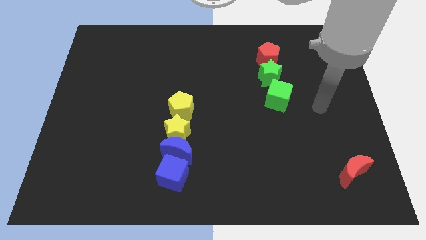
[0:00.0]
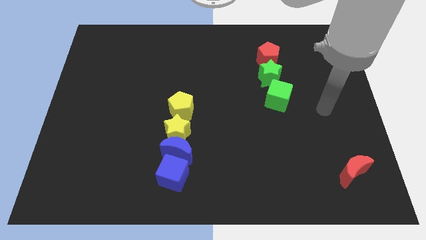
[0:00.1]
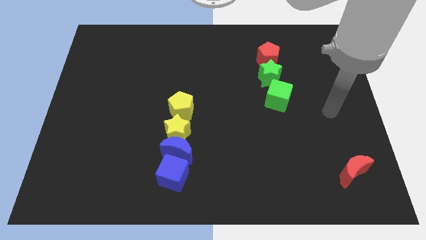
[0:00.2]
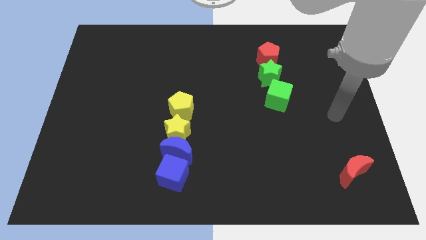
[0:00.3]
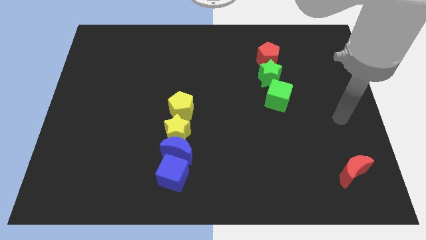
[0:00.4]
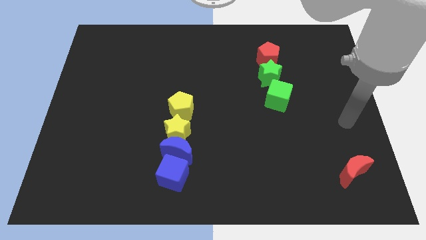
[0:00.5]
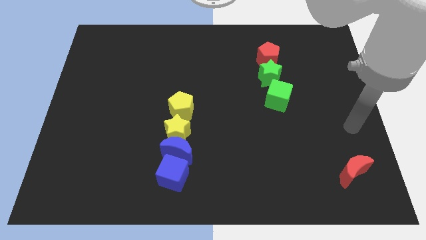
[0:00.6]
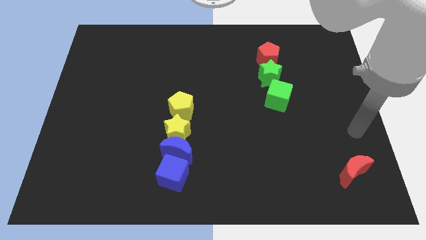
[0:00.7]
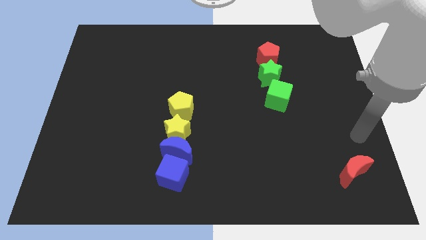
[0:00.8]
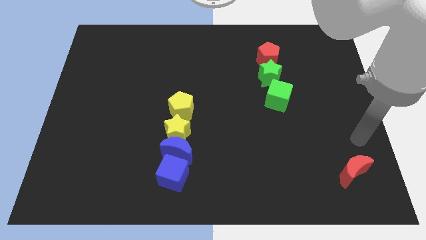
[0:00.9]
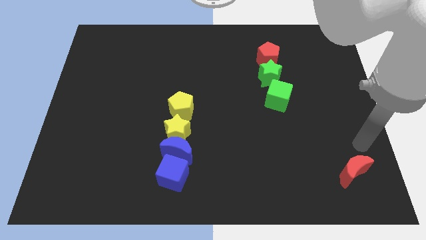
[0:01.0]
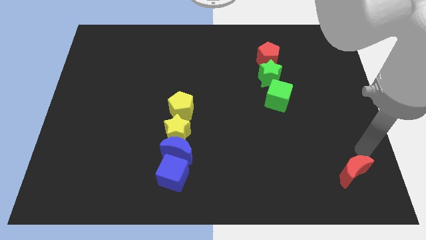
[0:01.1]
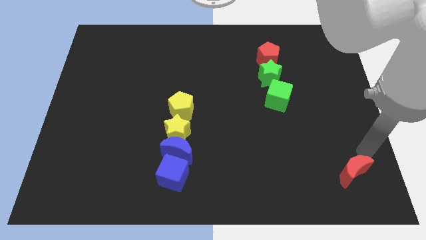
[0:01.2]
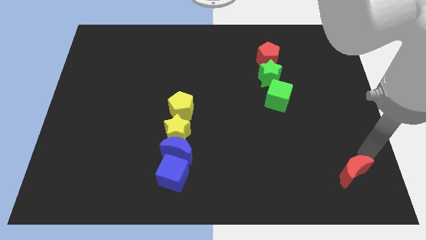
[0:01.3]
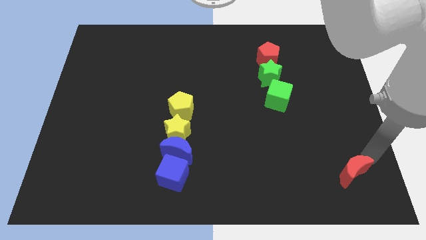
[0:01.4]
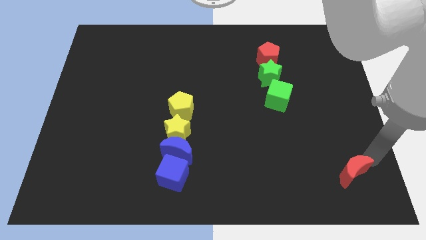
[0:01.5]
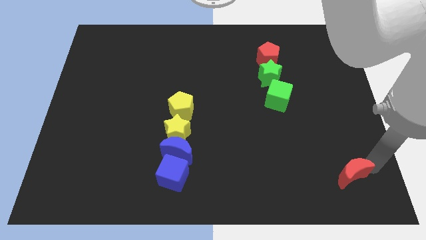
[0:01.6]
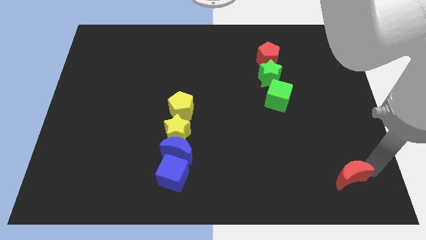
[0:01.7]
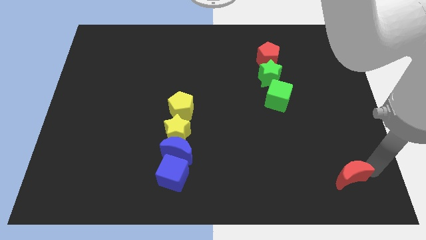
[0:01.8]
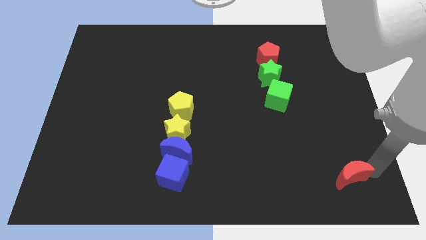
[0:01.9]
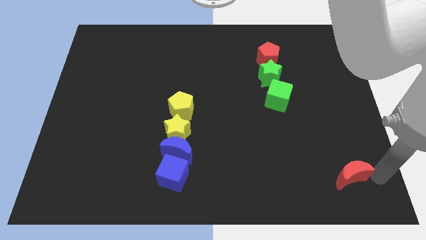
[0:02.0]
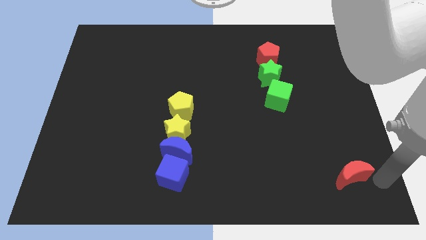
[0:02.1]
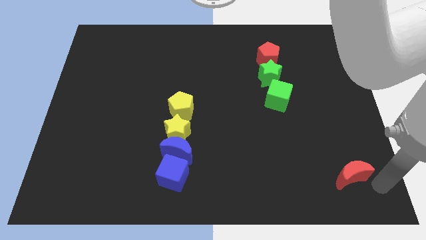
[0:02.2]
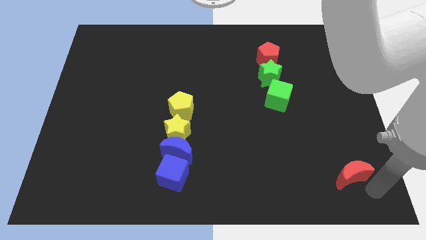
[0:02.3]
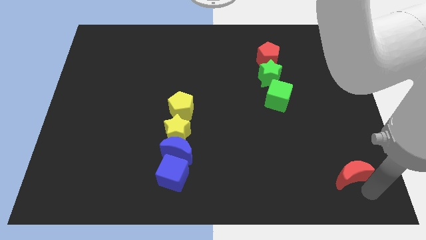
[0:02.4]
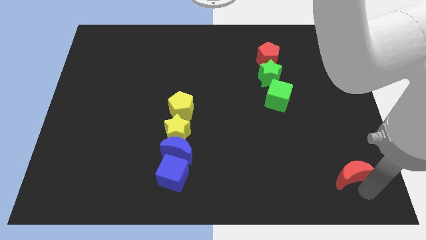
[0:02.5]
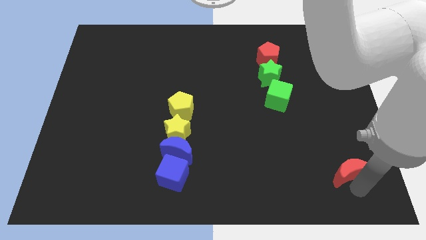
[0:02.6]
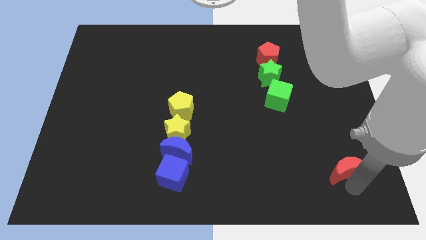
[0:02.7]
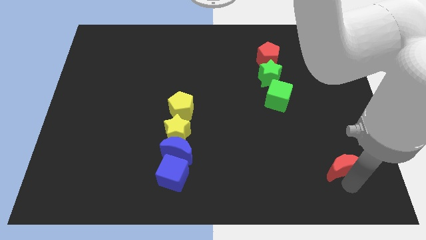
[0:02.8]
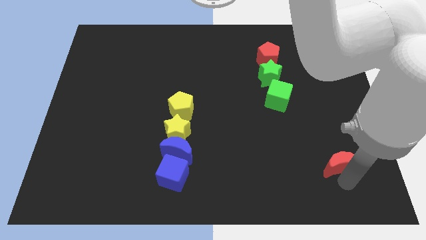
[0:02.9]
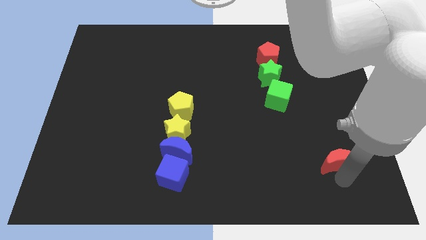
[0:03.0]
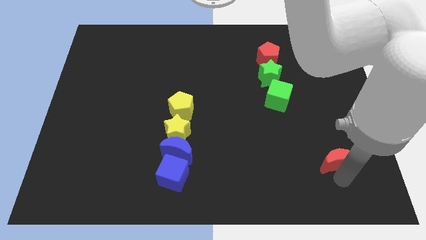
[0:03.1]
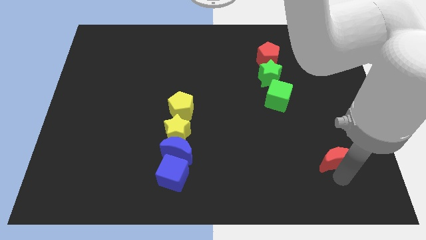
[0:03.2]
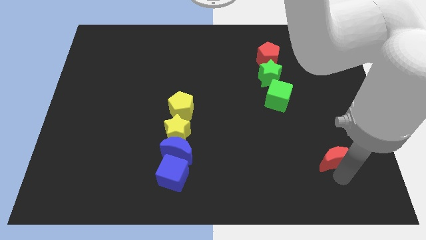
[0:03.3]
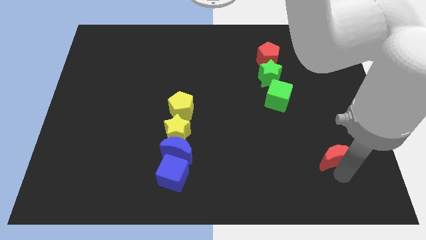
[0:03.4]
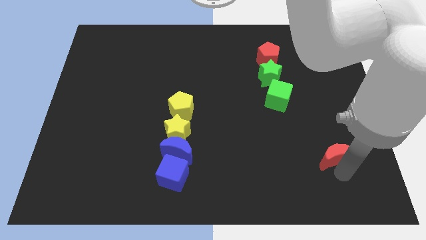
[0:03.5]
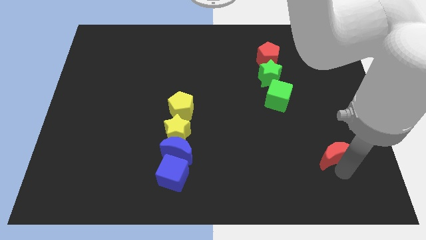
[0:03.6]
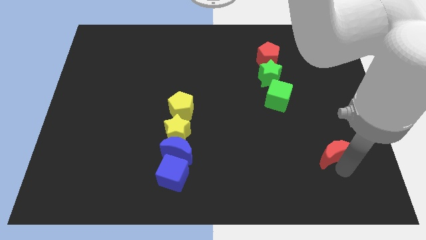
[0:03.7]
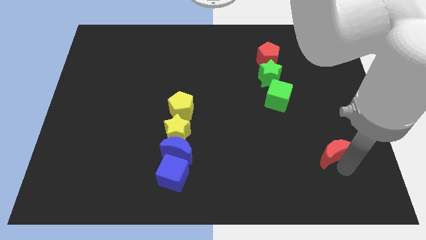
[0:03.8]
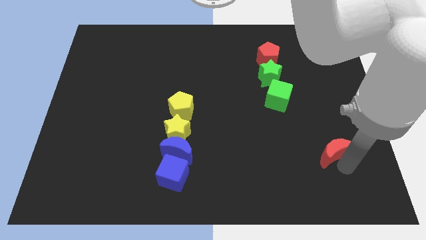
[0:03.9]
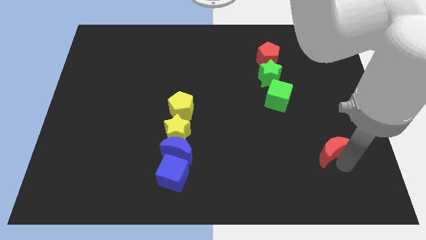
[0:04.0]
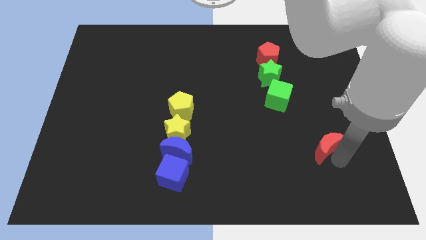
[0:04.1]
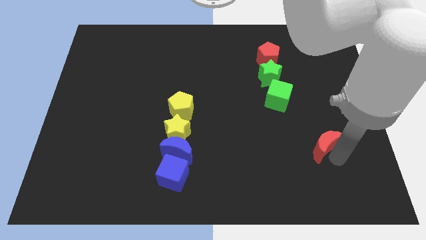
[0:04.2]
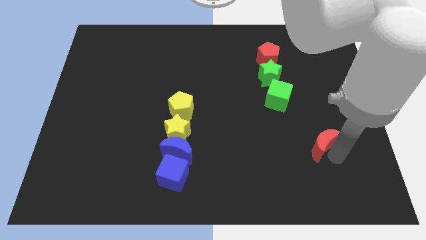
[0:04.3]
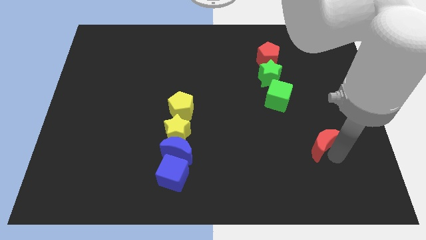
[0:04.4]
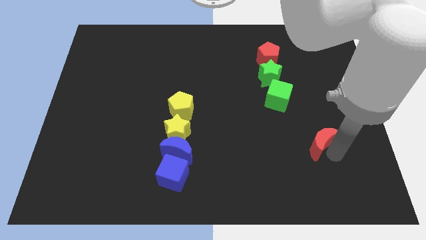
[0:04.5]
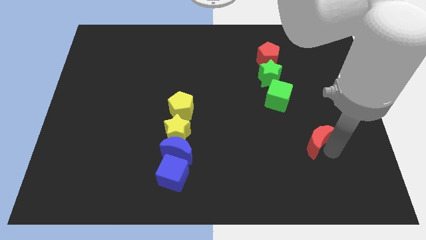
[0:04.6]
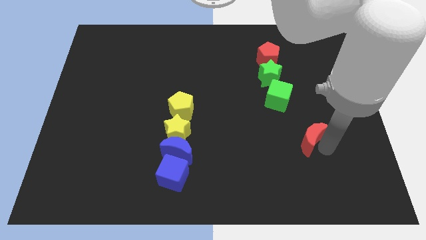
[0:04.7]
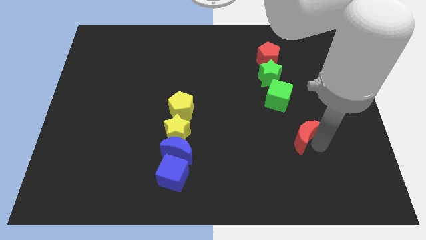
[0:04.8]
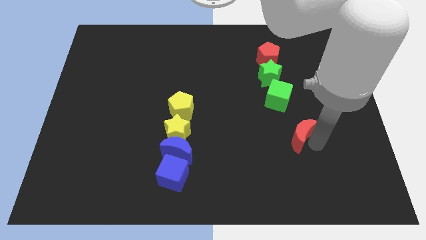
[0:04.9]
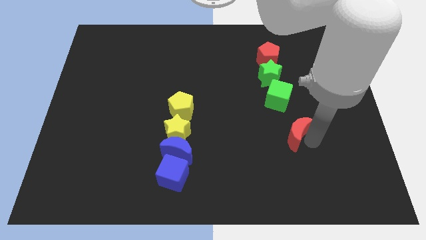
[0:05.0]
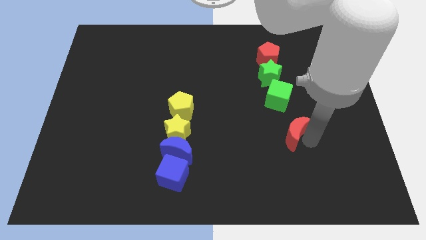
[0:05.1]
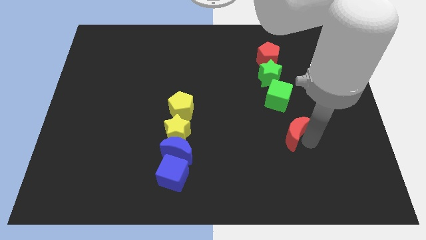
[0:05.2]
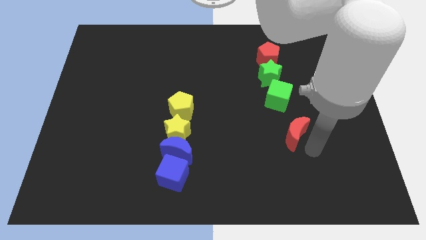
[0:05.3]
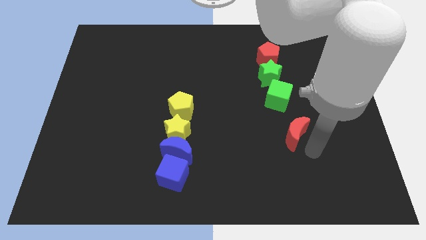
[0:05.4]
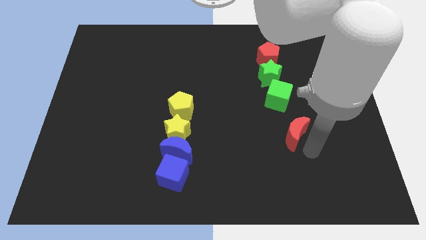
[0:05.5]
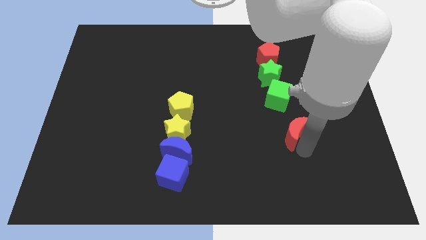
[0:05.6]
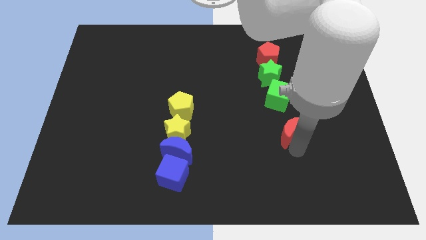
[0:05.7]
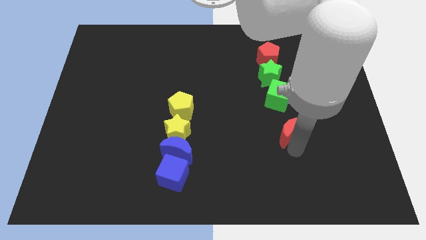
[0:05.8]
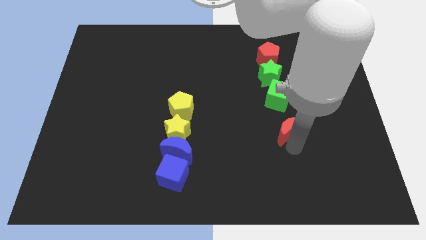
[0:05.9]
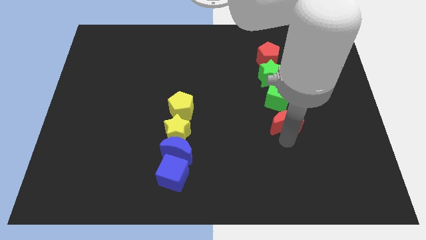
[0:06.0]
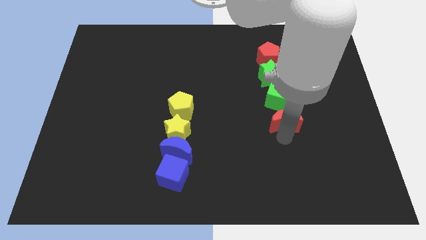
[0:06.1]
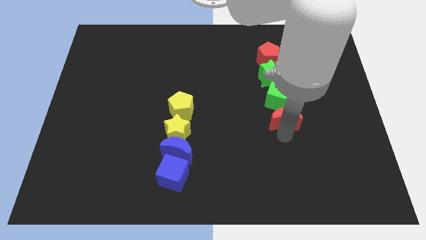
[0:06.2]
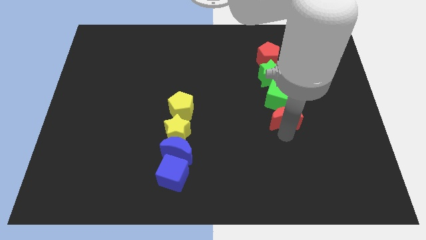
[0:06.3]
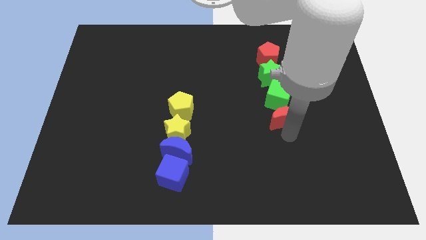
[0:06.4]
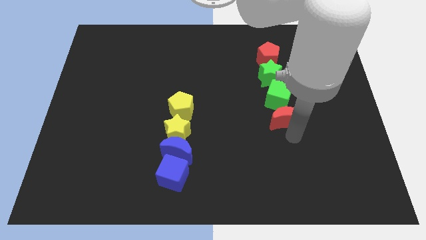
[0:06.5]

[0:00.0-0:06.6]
move the red crescent to the bottom of the green cube

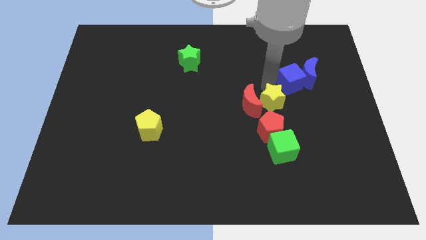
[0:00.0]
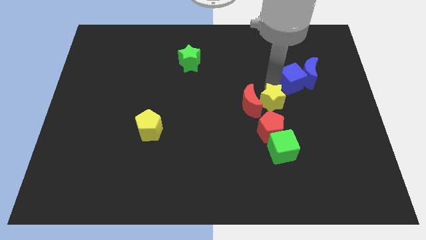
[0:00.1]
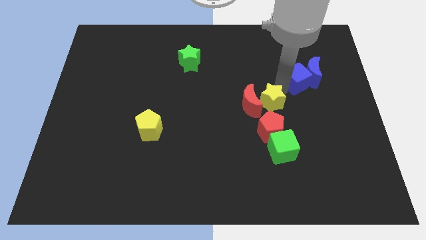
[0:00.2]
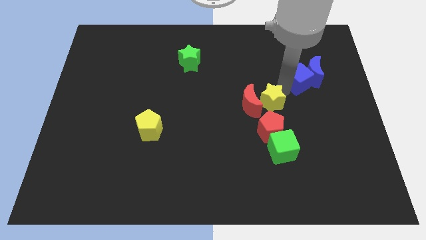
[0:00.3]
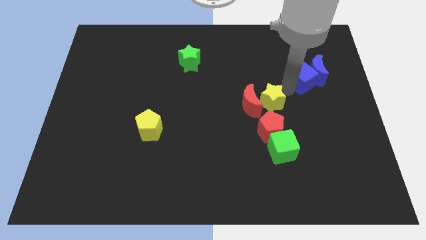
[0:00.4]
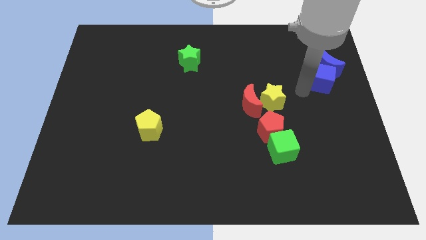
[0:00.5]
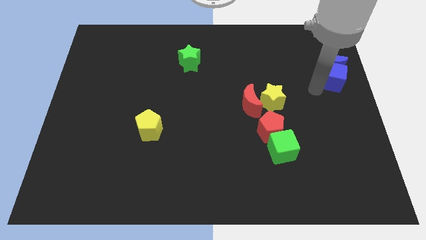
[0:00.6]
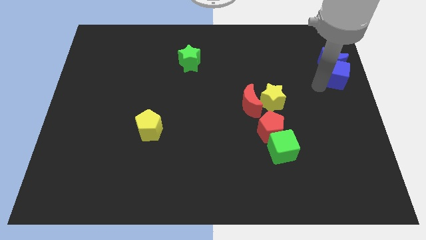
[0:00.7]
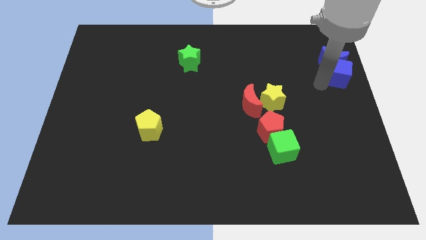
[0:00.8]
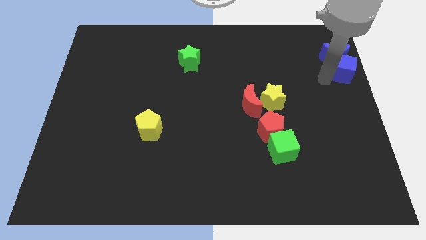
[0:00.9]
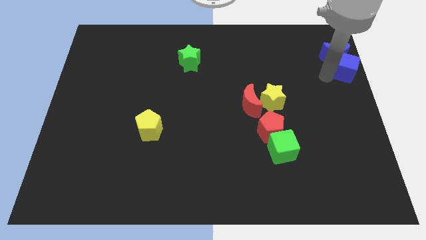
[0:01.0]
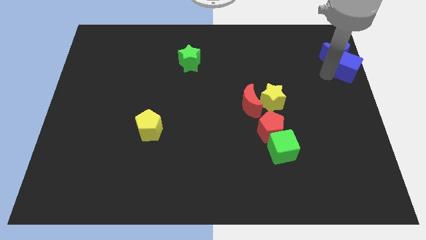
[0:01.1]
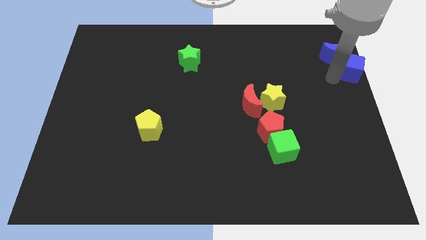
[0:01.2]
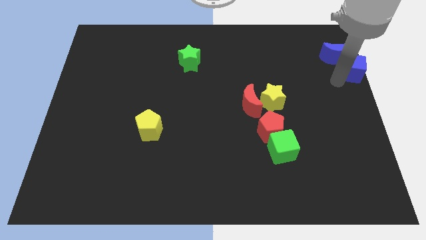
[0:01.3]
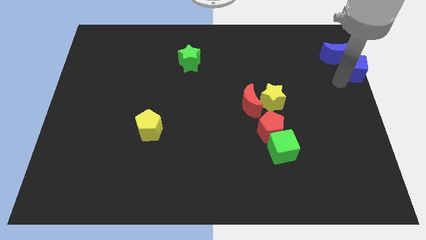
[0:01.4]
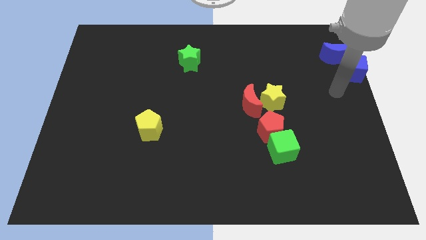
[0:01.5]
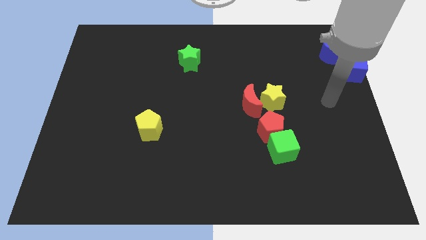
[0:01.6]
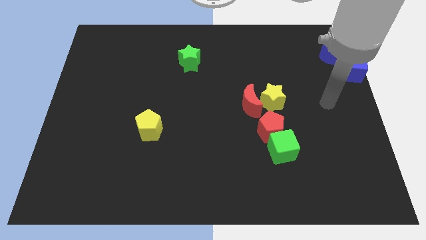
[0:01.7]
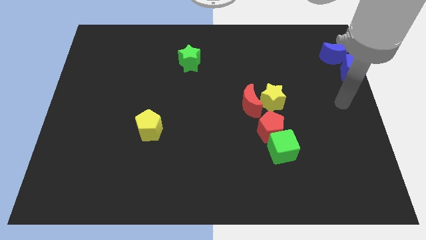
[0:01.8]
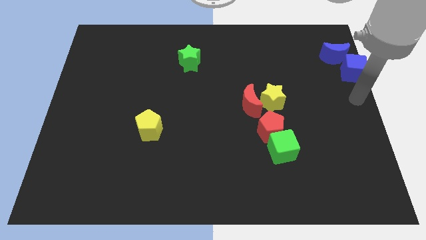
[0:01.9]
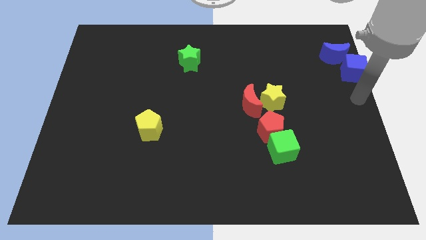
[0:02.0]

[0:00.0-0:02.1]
move blue cube and blue moon bottom right of the board

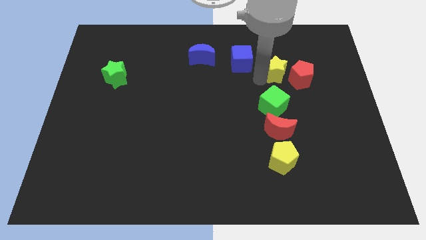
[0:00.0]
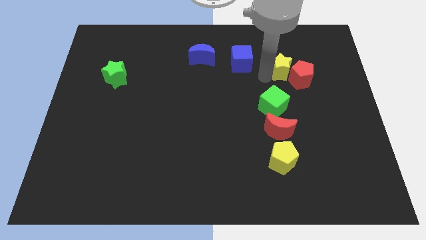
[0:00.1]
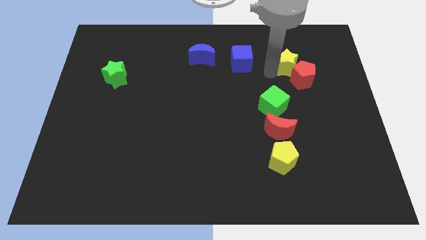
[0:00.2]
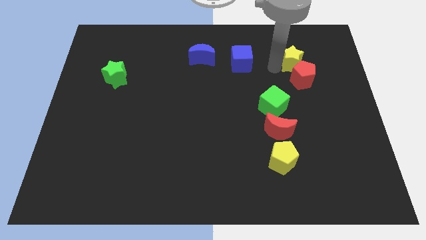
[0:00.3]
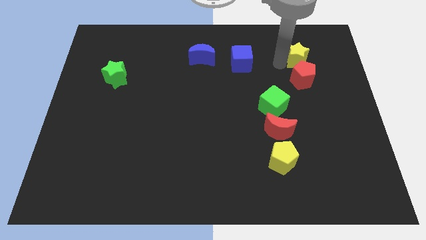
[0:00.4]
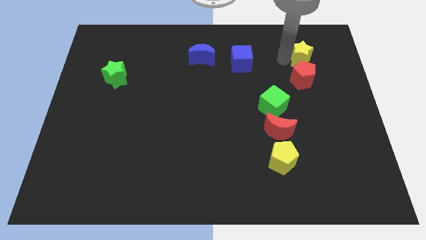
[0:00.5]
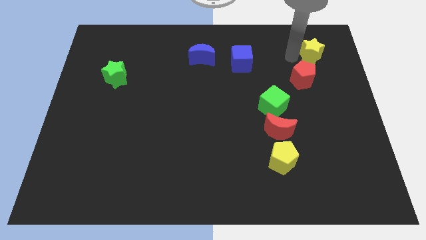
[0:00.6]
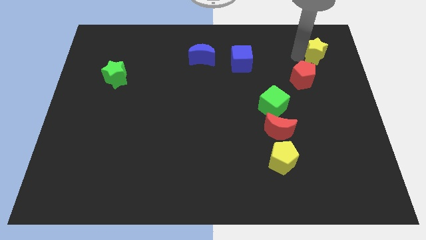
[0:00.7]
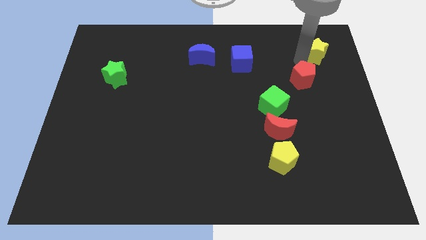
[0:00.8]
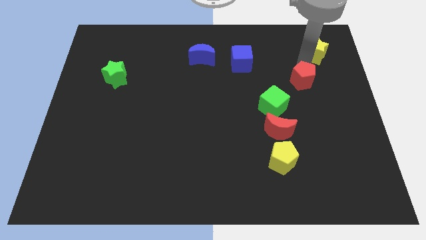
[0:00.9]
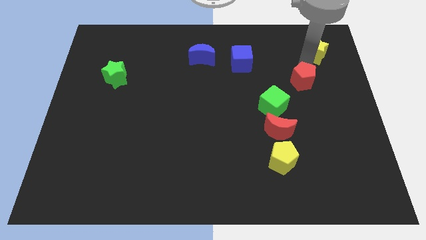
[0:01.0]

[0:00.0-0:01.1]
separate yellow star from red pentagon
